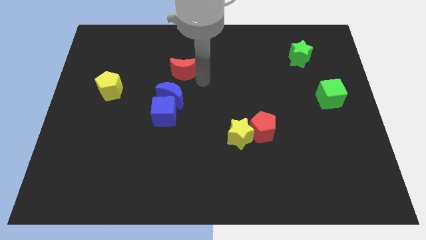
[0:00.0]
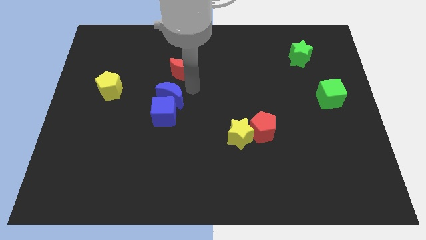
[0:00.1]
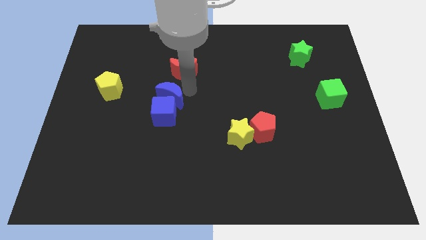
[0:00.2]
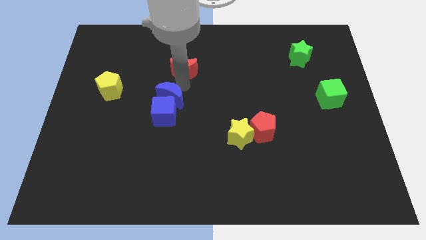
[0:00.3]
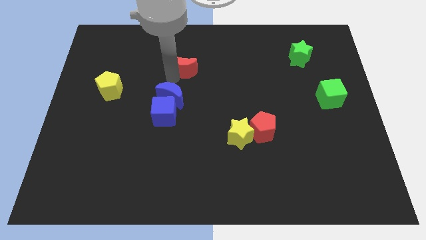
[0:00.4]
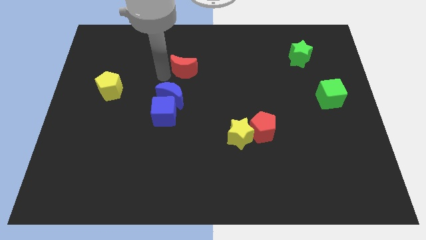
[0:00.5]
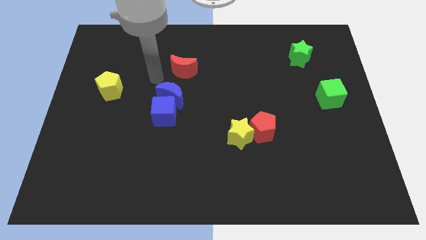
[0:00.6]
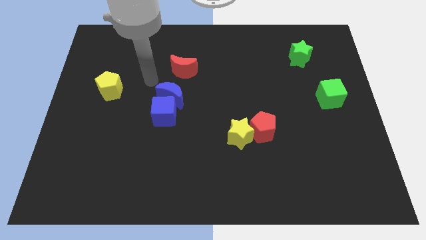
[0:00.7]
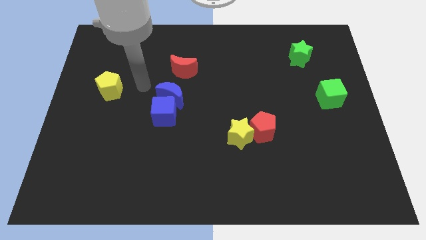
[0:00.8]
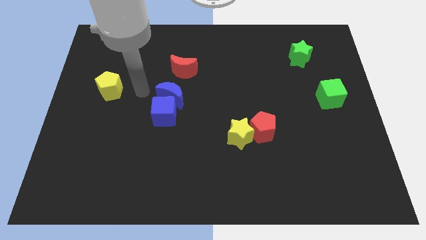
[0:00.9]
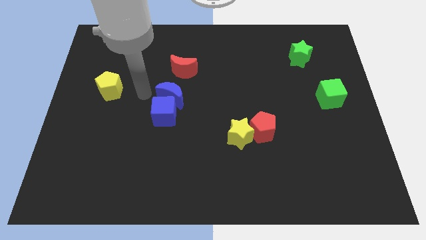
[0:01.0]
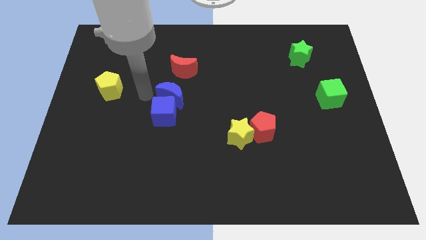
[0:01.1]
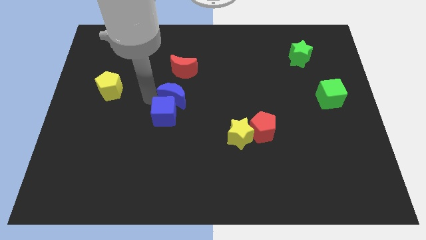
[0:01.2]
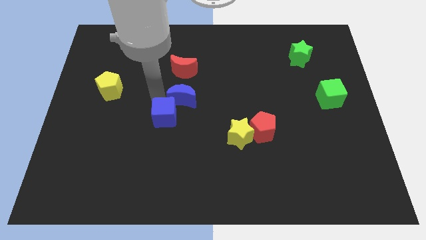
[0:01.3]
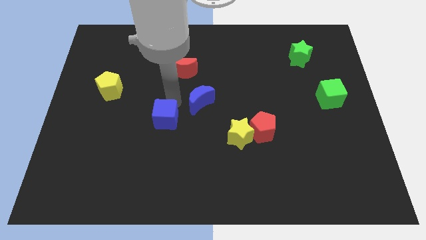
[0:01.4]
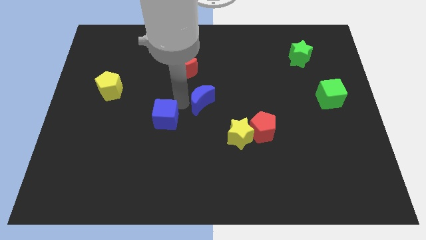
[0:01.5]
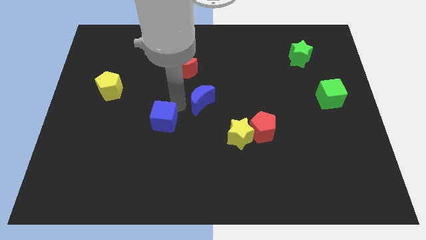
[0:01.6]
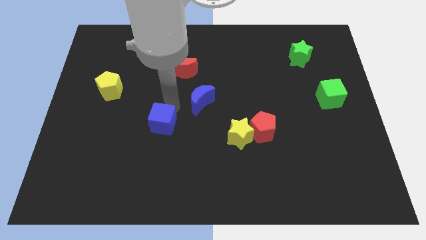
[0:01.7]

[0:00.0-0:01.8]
separate blue moon from blue cube

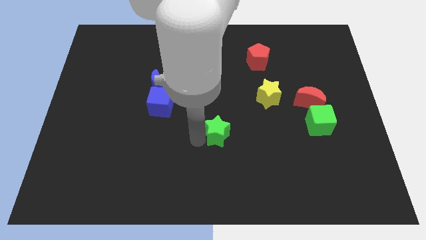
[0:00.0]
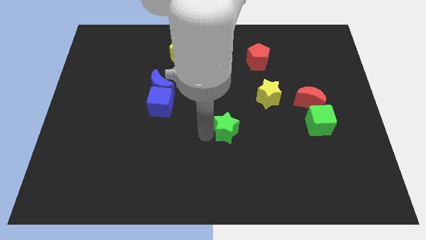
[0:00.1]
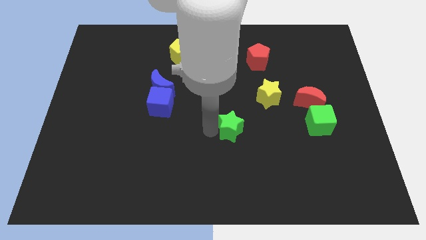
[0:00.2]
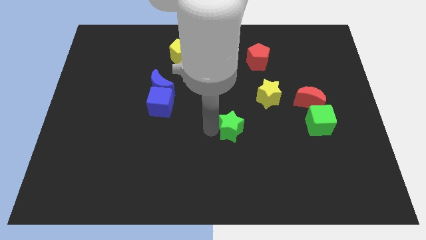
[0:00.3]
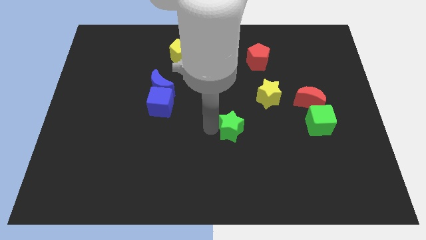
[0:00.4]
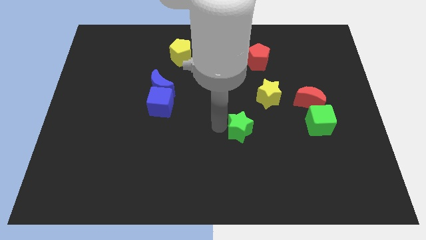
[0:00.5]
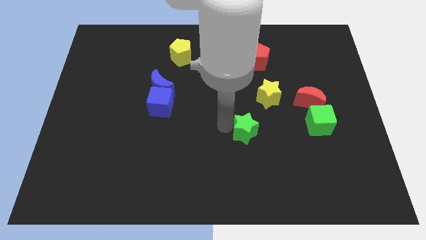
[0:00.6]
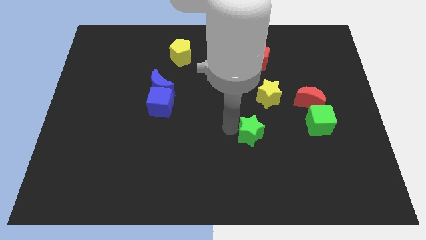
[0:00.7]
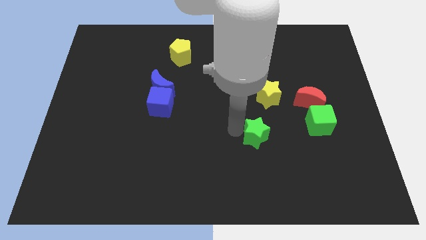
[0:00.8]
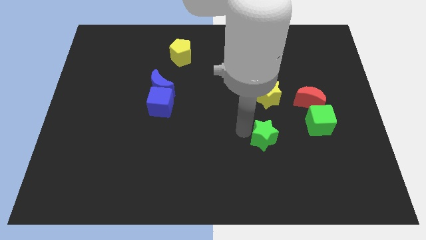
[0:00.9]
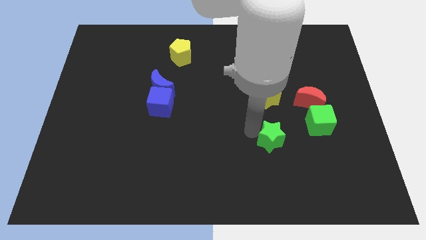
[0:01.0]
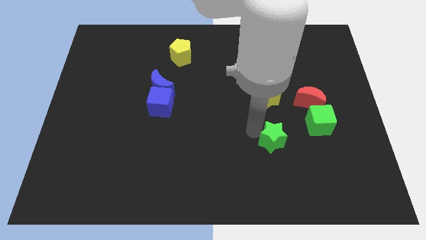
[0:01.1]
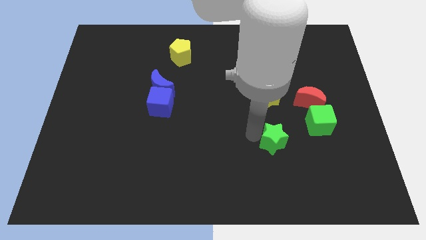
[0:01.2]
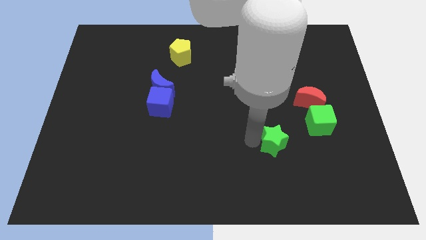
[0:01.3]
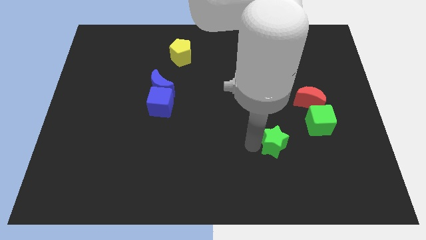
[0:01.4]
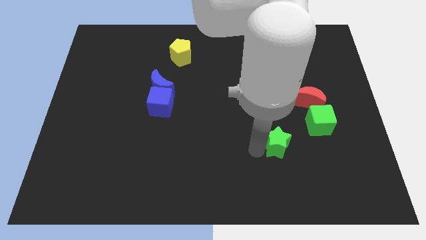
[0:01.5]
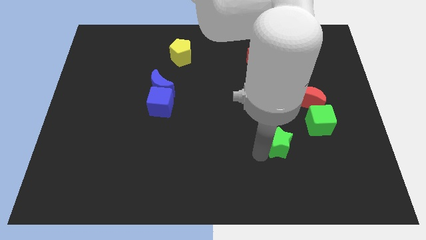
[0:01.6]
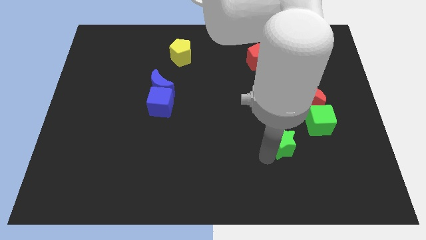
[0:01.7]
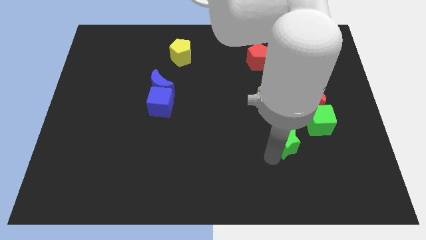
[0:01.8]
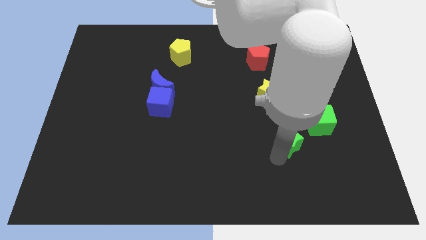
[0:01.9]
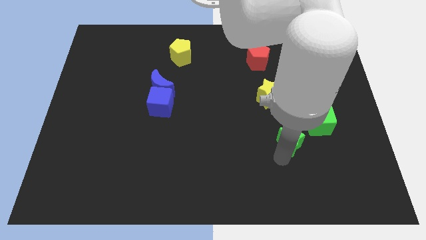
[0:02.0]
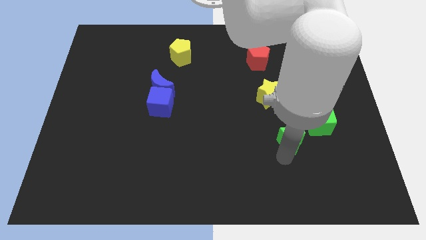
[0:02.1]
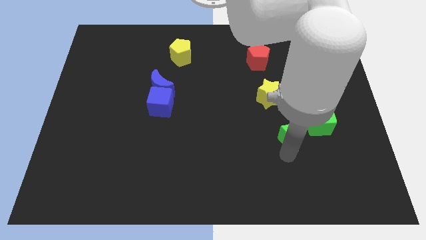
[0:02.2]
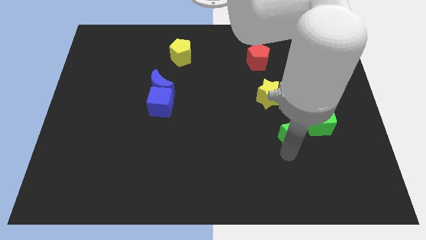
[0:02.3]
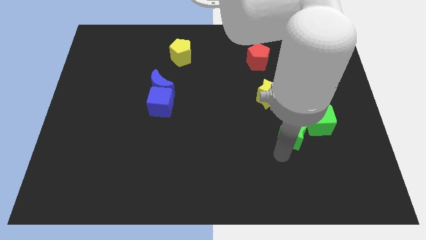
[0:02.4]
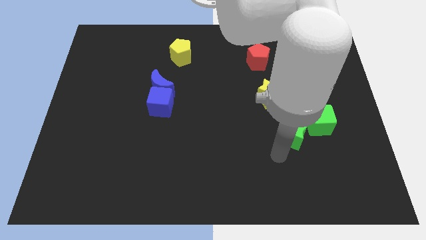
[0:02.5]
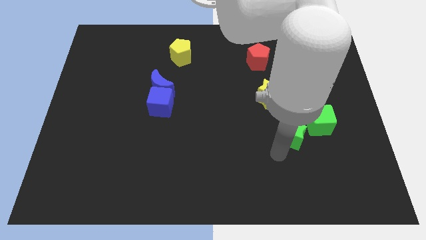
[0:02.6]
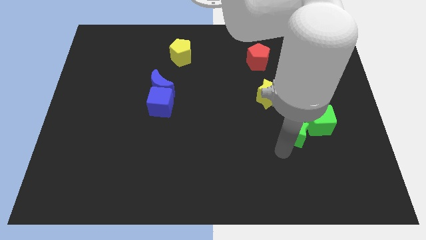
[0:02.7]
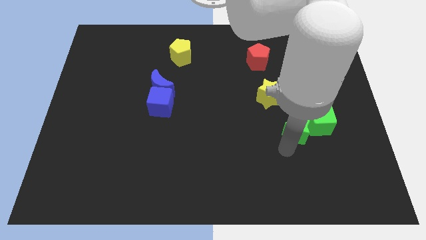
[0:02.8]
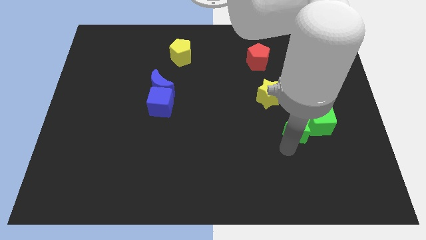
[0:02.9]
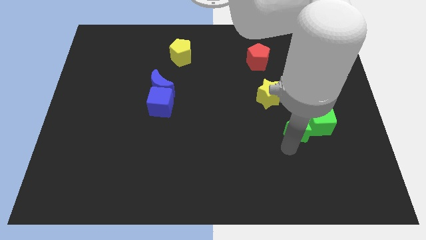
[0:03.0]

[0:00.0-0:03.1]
push the green star to the left side of green cube

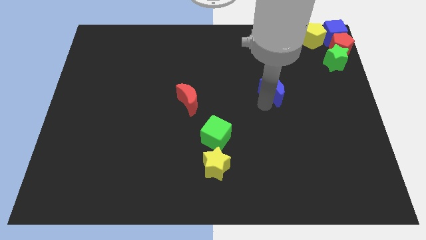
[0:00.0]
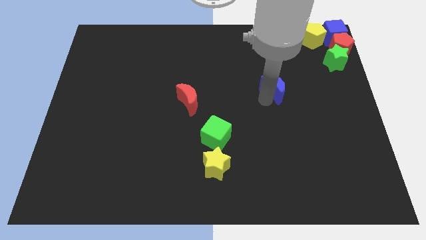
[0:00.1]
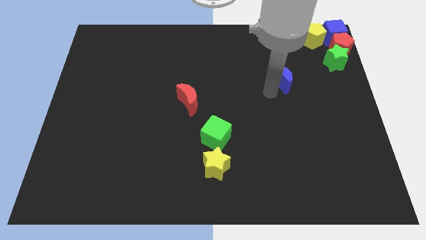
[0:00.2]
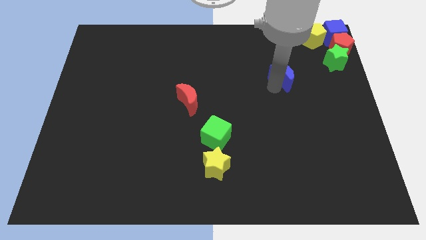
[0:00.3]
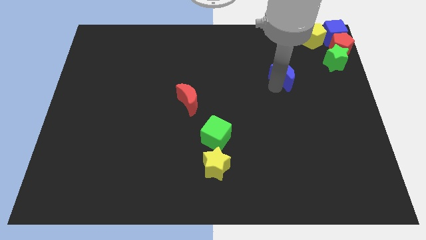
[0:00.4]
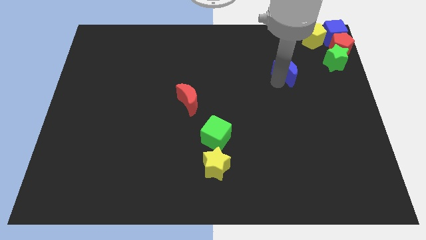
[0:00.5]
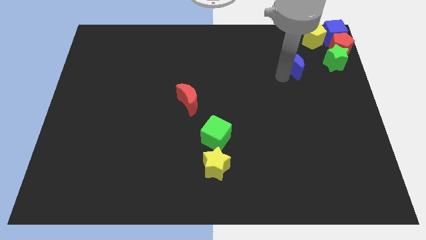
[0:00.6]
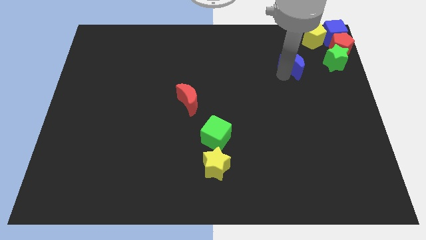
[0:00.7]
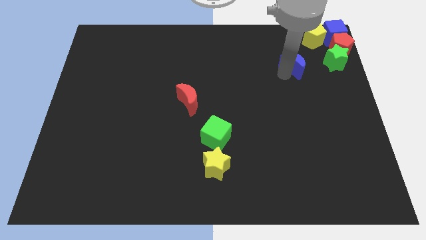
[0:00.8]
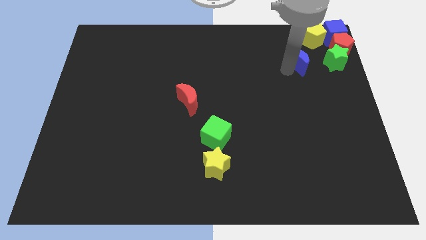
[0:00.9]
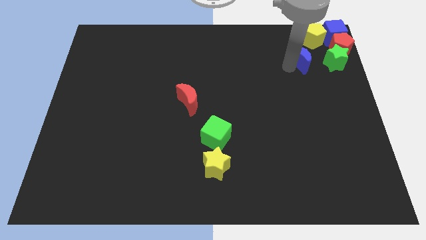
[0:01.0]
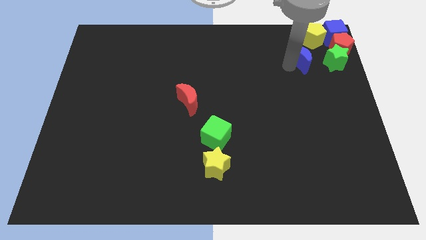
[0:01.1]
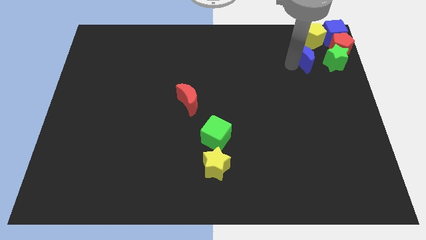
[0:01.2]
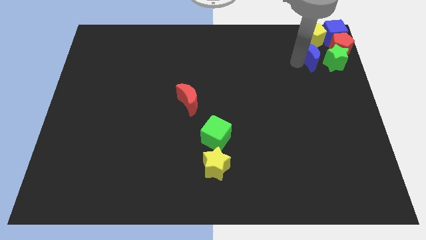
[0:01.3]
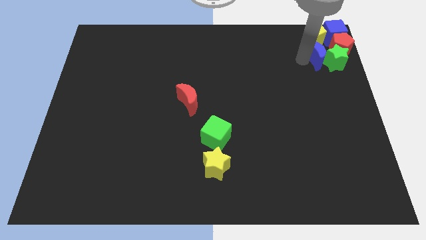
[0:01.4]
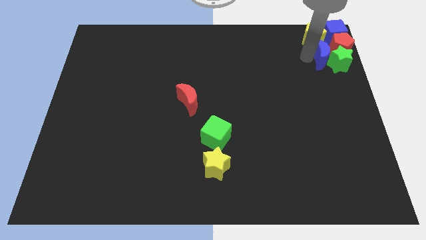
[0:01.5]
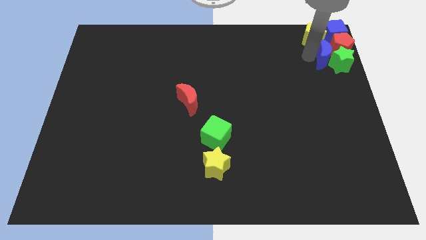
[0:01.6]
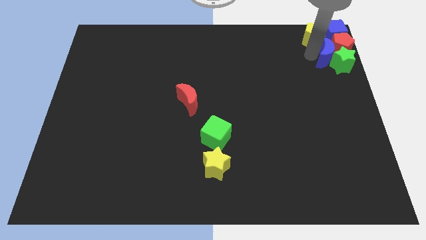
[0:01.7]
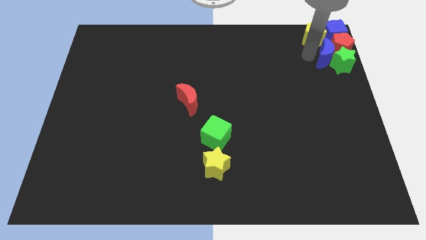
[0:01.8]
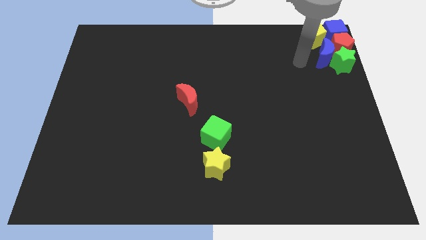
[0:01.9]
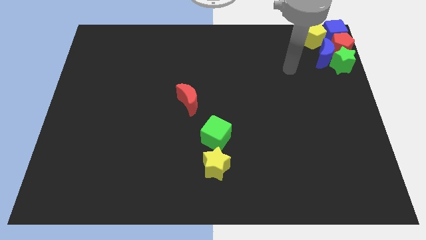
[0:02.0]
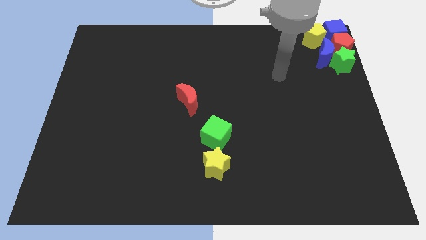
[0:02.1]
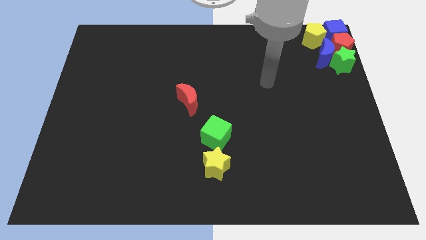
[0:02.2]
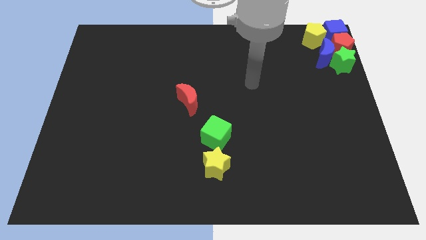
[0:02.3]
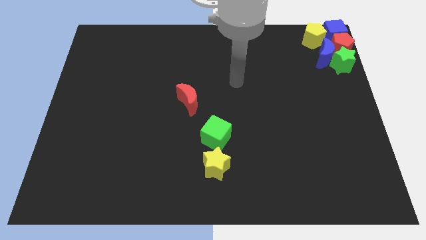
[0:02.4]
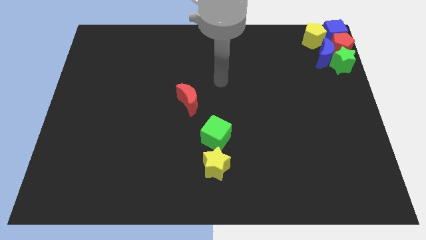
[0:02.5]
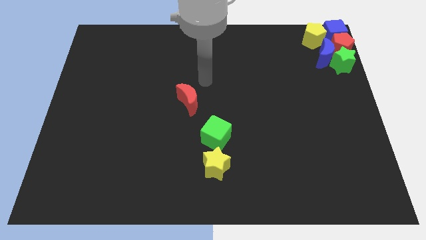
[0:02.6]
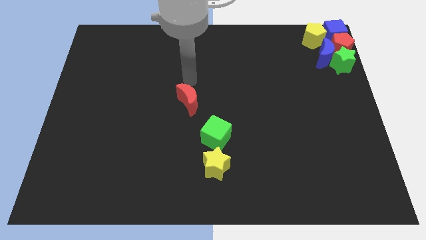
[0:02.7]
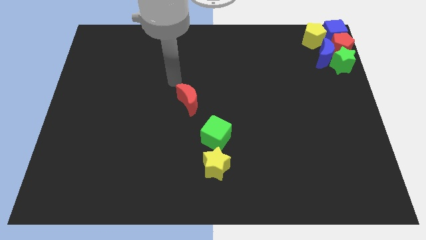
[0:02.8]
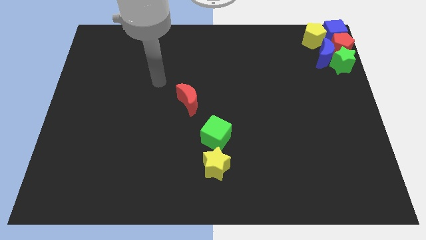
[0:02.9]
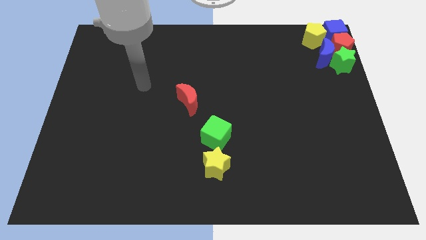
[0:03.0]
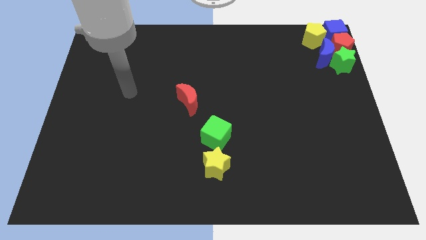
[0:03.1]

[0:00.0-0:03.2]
move the blue moon into the green star and the red pentagon

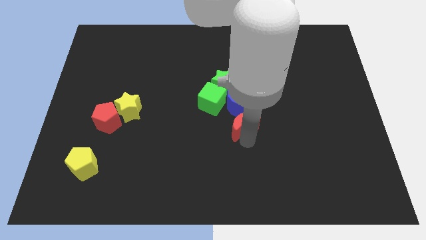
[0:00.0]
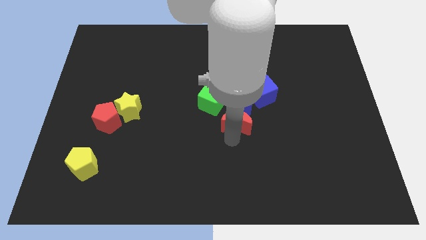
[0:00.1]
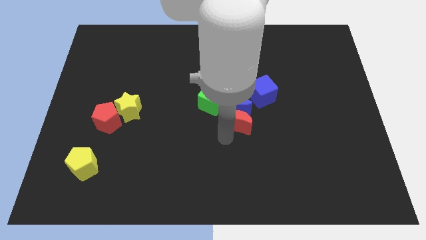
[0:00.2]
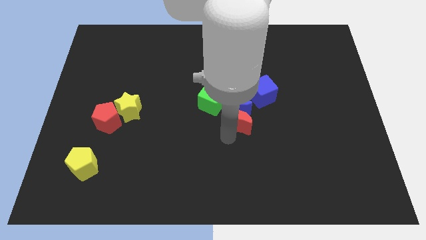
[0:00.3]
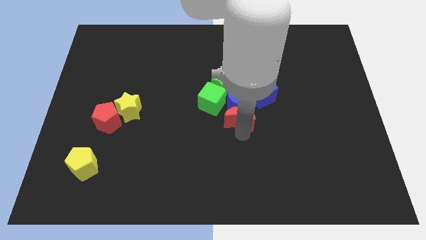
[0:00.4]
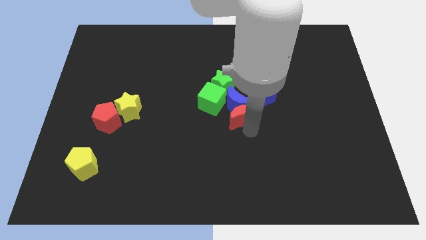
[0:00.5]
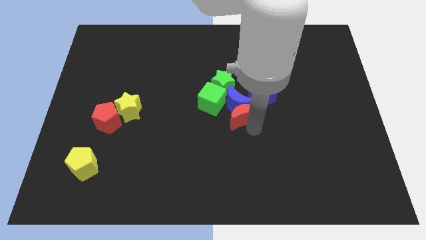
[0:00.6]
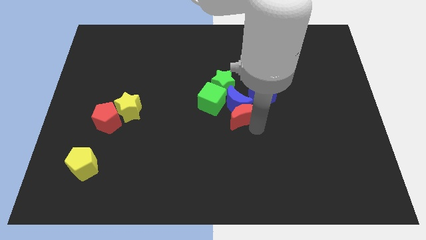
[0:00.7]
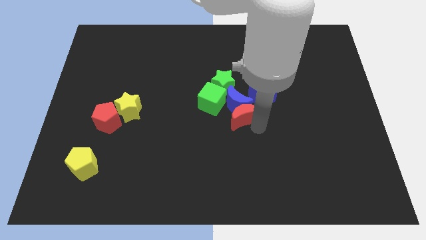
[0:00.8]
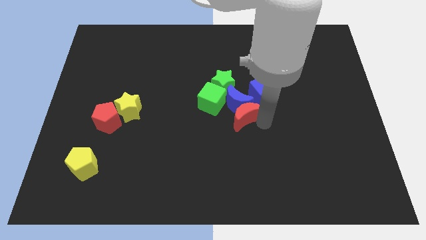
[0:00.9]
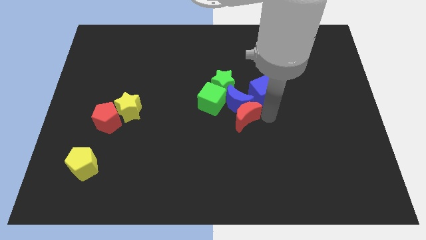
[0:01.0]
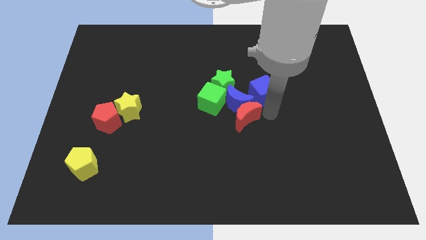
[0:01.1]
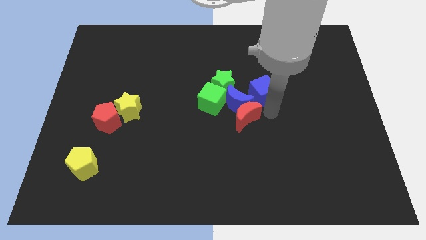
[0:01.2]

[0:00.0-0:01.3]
push red moon in blue crescent
